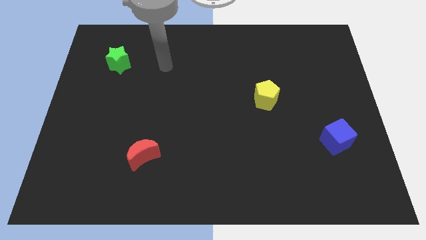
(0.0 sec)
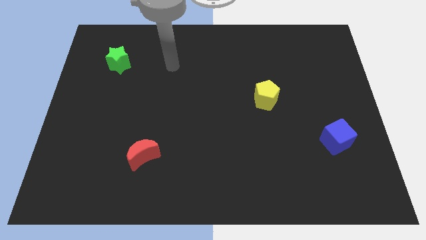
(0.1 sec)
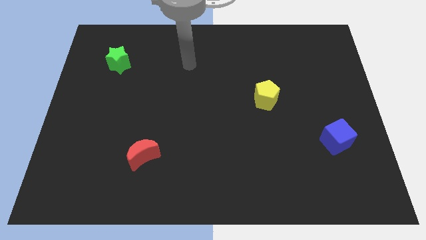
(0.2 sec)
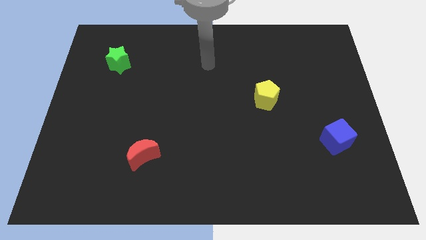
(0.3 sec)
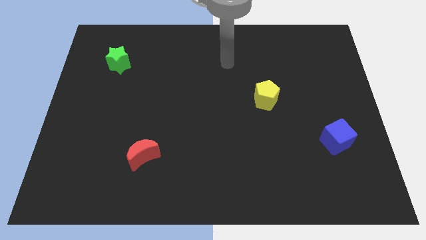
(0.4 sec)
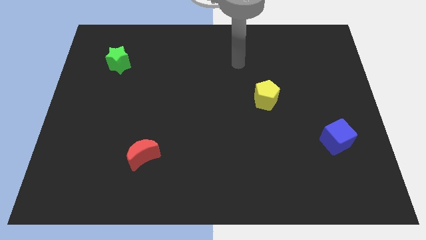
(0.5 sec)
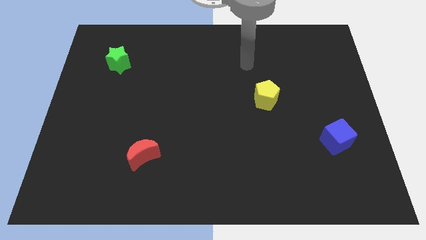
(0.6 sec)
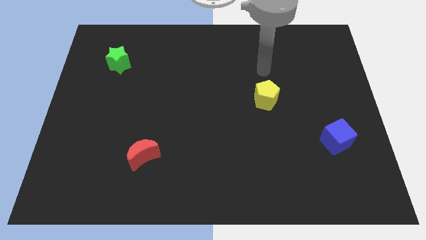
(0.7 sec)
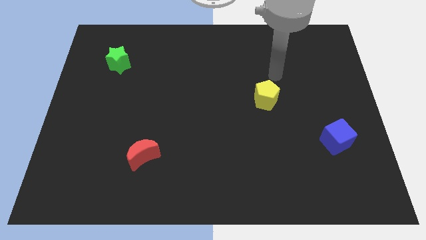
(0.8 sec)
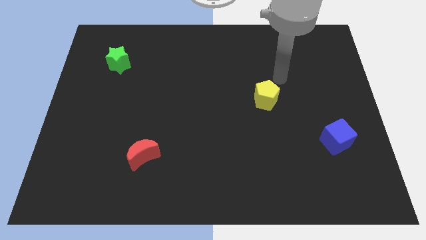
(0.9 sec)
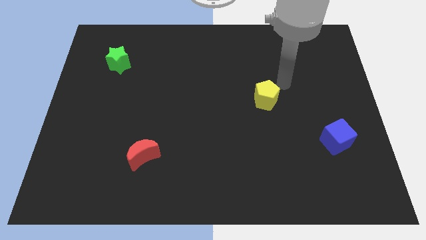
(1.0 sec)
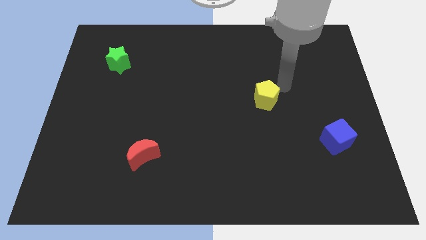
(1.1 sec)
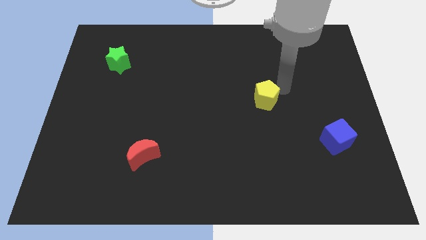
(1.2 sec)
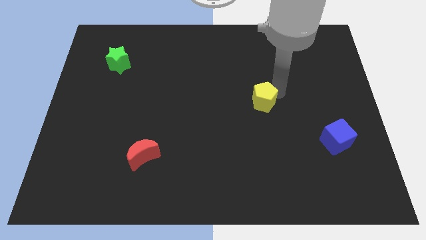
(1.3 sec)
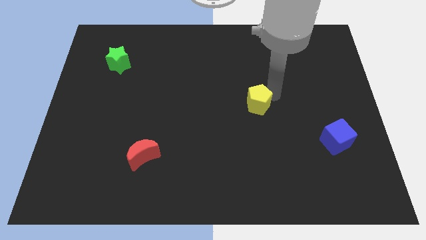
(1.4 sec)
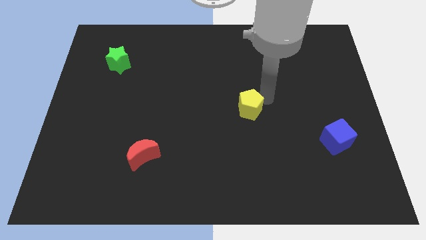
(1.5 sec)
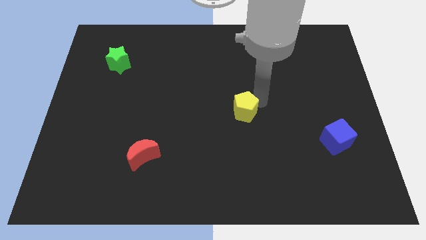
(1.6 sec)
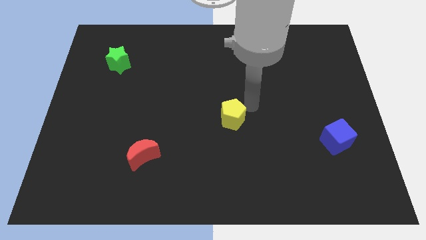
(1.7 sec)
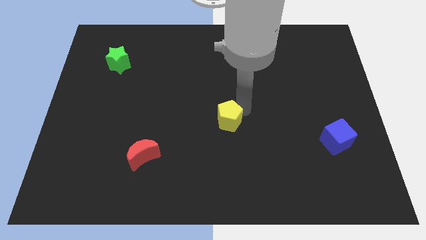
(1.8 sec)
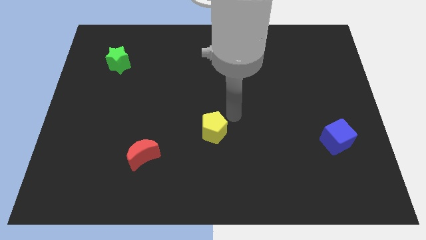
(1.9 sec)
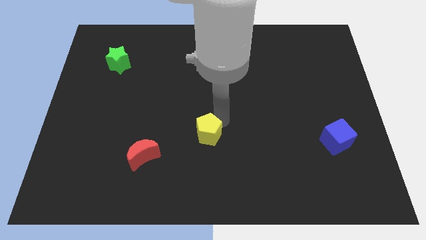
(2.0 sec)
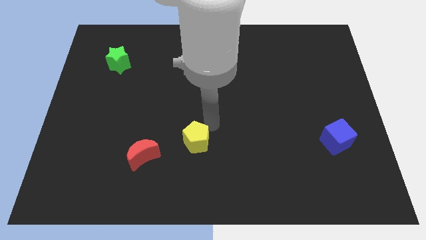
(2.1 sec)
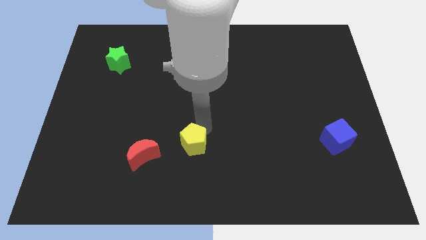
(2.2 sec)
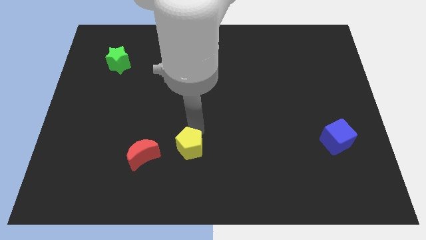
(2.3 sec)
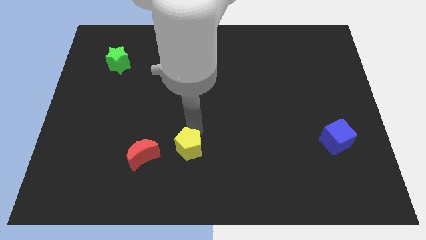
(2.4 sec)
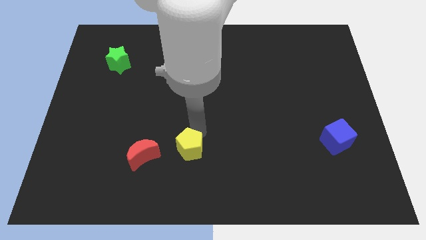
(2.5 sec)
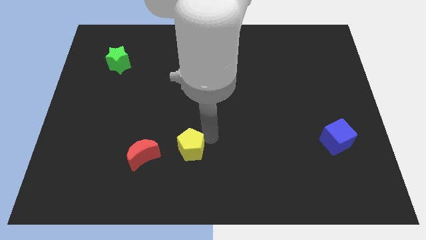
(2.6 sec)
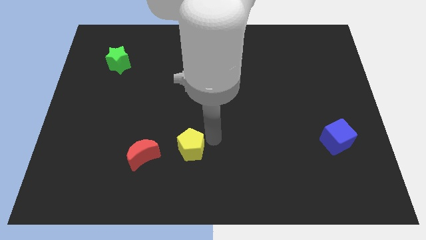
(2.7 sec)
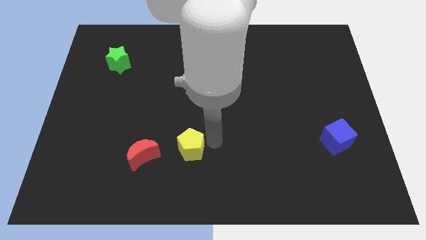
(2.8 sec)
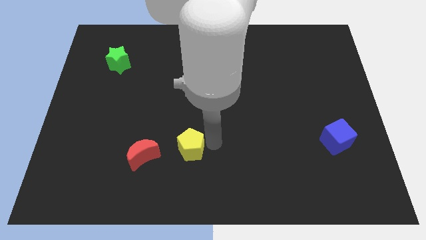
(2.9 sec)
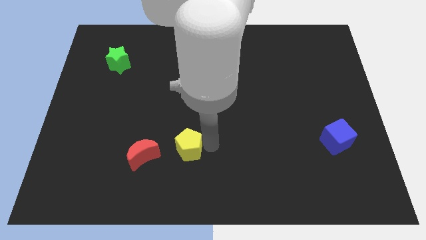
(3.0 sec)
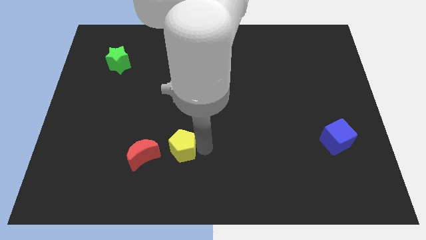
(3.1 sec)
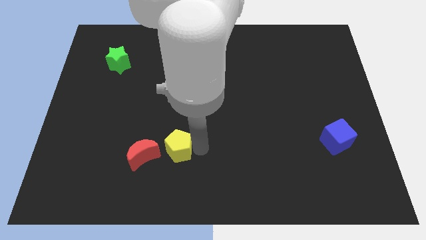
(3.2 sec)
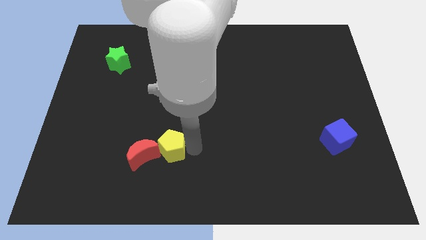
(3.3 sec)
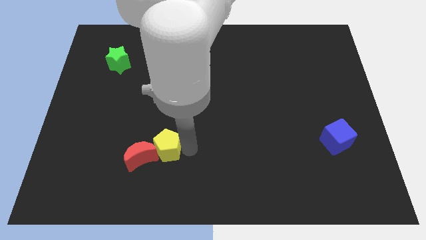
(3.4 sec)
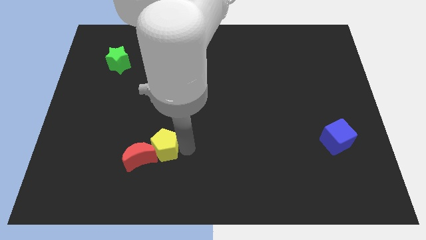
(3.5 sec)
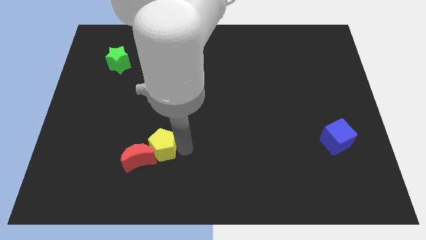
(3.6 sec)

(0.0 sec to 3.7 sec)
put the yellow pentagon to the red block

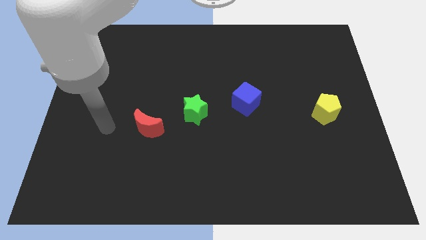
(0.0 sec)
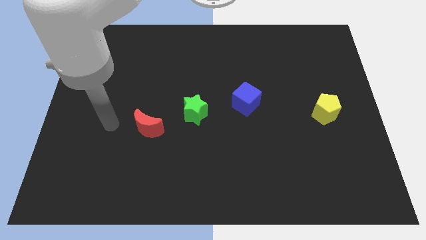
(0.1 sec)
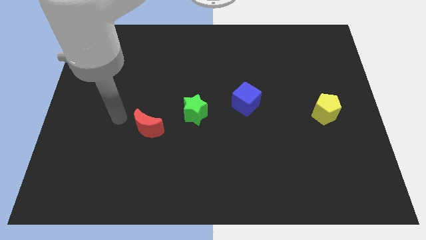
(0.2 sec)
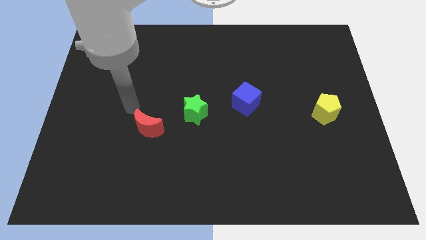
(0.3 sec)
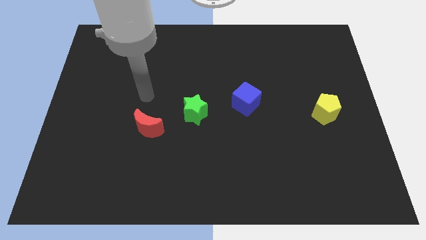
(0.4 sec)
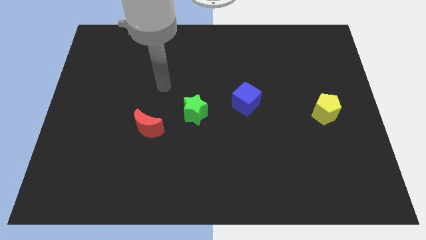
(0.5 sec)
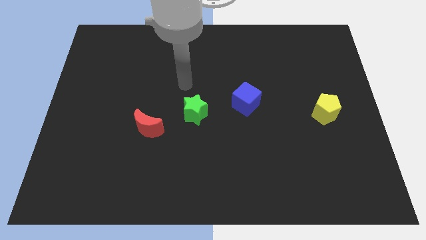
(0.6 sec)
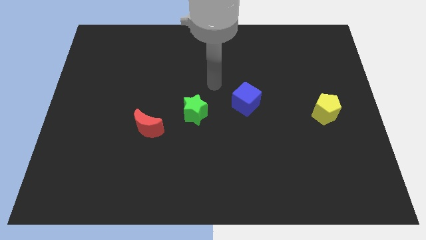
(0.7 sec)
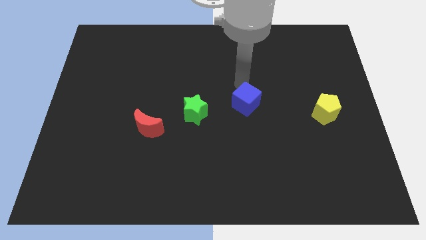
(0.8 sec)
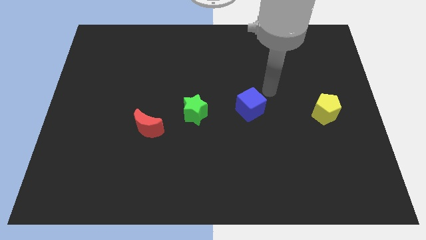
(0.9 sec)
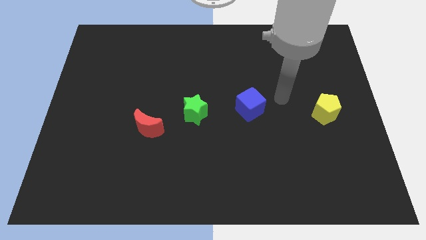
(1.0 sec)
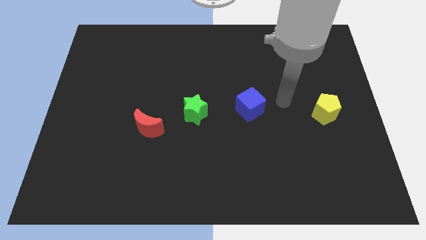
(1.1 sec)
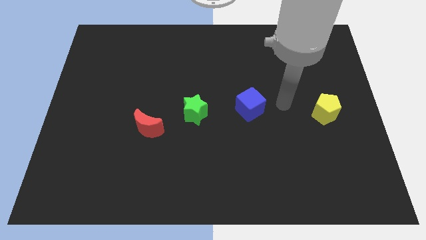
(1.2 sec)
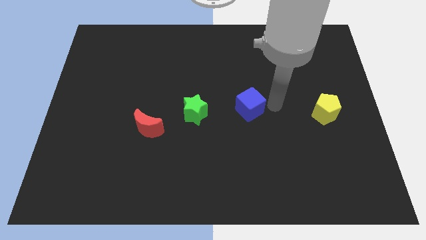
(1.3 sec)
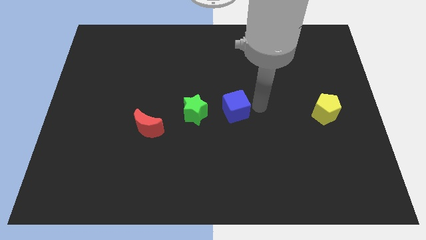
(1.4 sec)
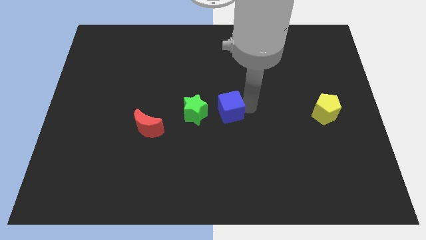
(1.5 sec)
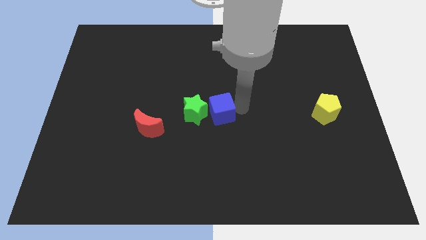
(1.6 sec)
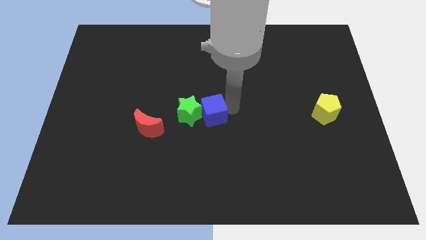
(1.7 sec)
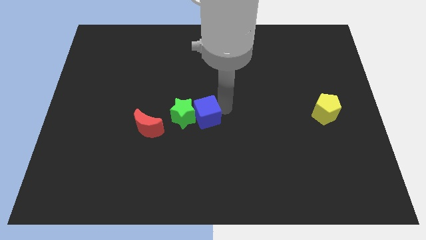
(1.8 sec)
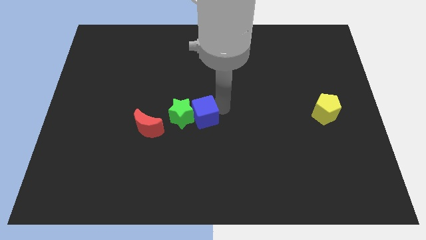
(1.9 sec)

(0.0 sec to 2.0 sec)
put the blue block close to the star

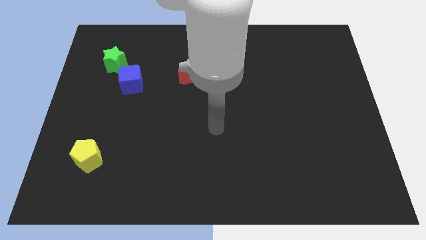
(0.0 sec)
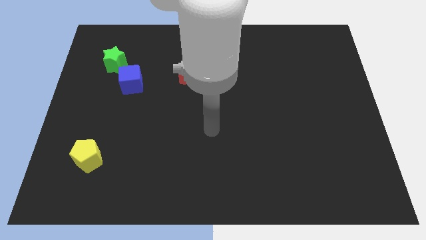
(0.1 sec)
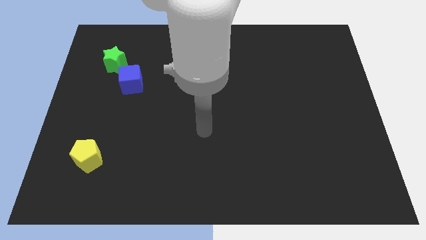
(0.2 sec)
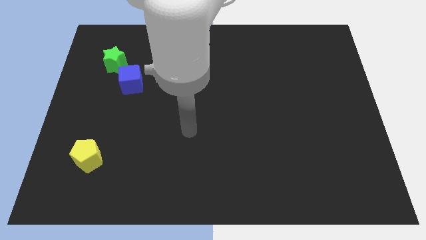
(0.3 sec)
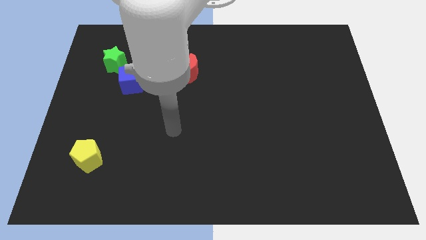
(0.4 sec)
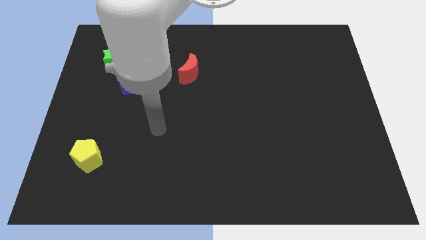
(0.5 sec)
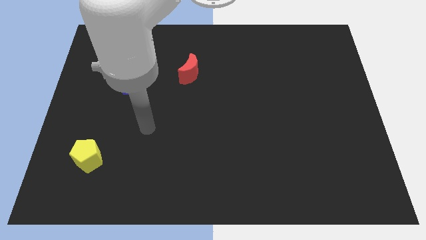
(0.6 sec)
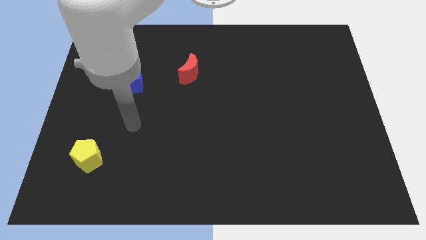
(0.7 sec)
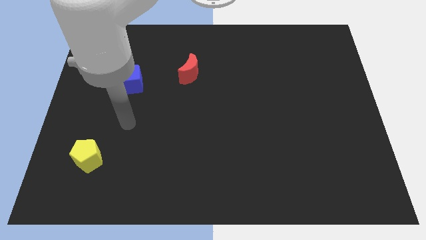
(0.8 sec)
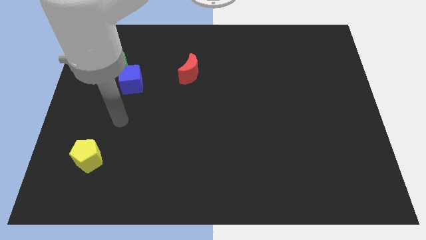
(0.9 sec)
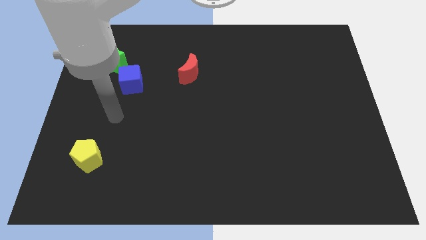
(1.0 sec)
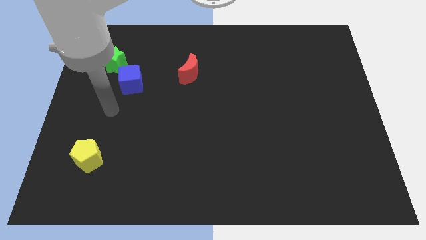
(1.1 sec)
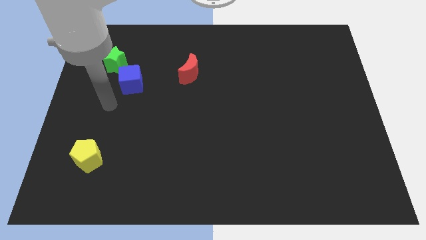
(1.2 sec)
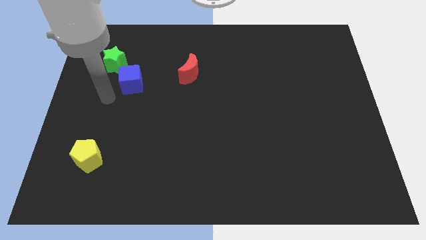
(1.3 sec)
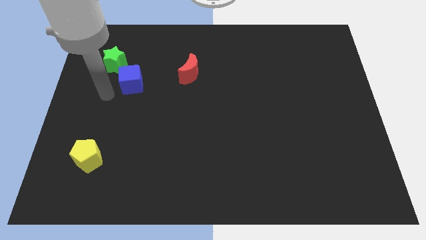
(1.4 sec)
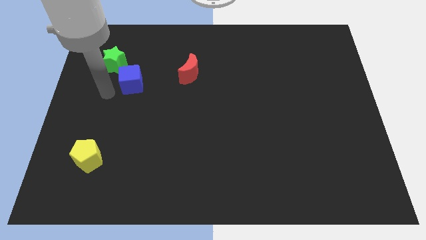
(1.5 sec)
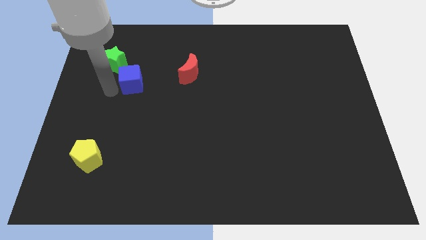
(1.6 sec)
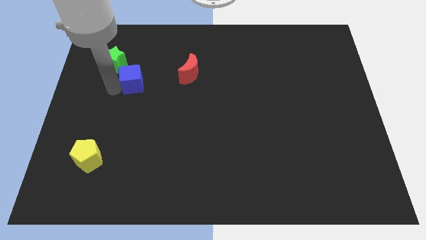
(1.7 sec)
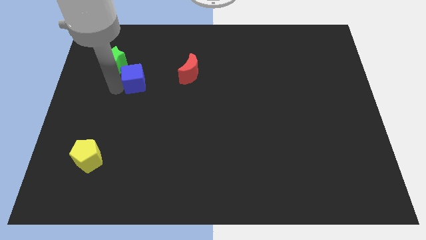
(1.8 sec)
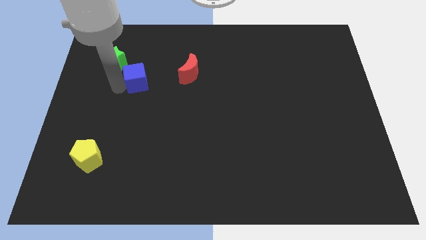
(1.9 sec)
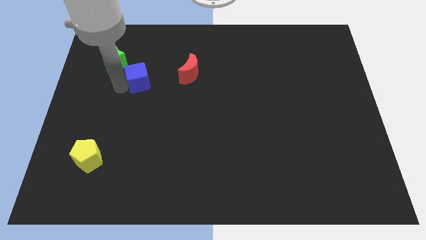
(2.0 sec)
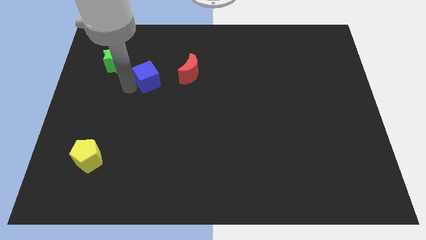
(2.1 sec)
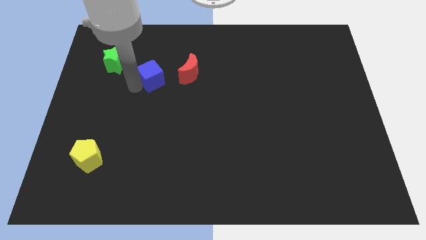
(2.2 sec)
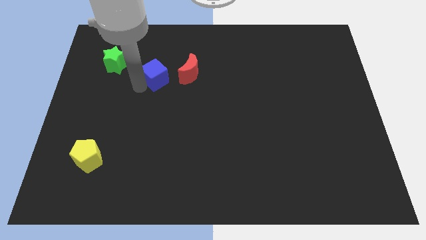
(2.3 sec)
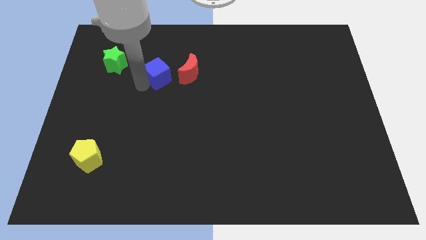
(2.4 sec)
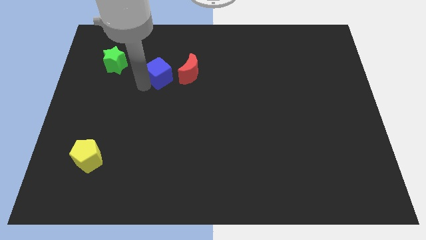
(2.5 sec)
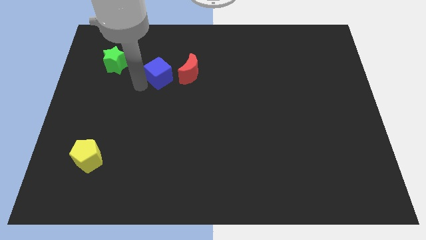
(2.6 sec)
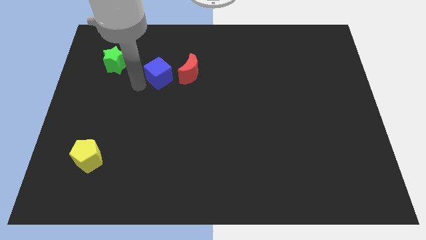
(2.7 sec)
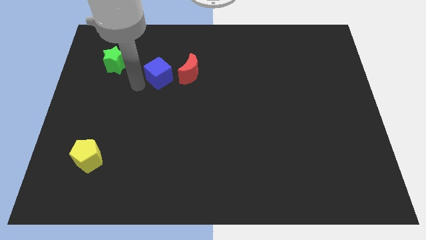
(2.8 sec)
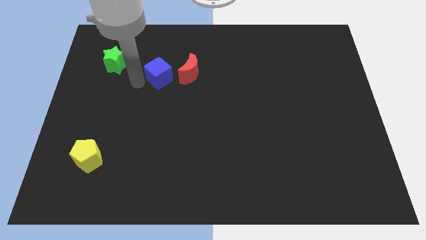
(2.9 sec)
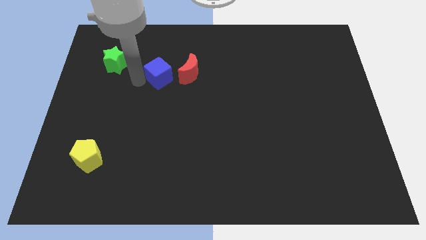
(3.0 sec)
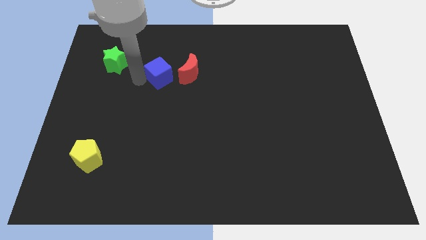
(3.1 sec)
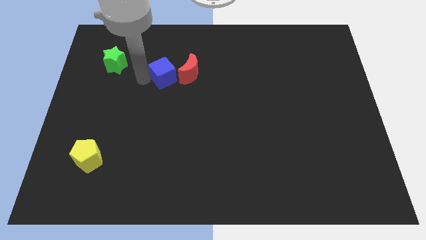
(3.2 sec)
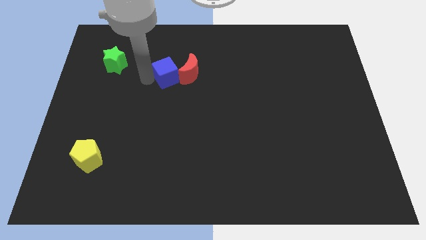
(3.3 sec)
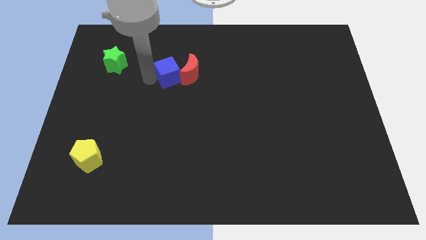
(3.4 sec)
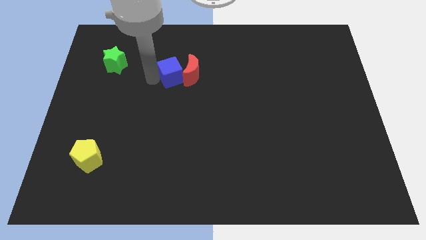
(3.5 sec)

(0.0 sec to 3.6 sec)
put the cube to the moon
